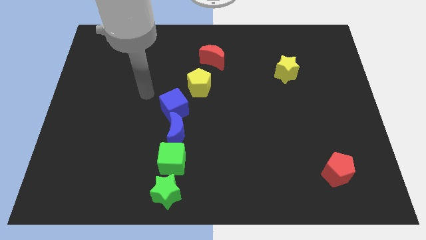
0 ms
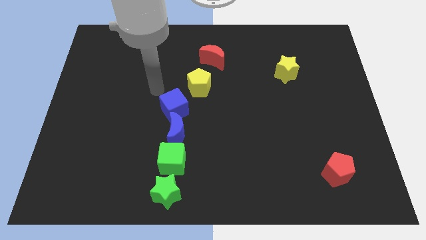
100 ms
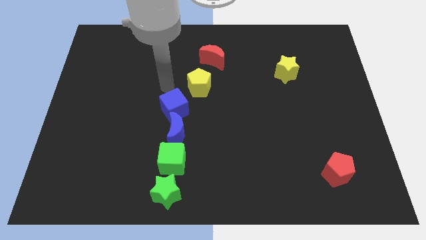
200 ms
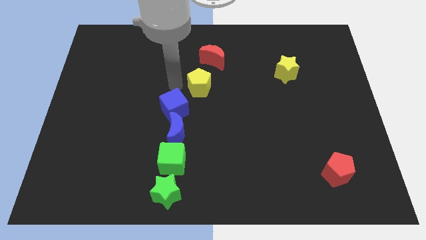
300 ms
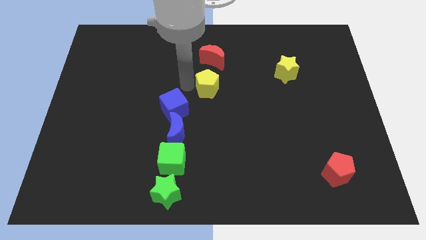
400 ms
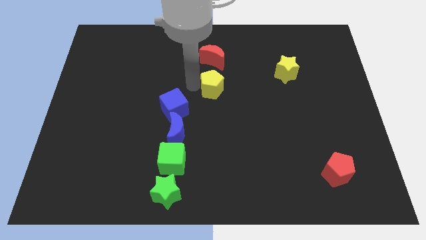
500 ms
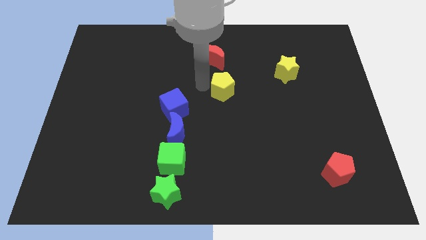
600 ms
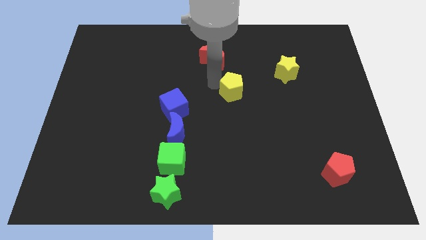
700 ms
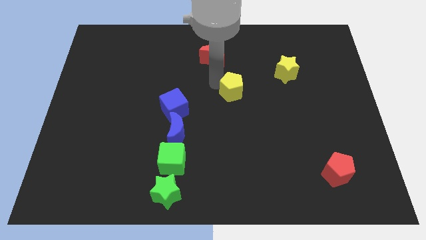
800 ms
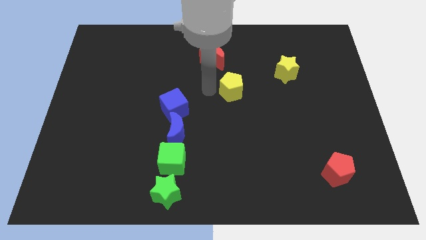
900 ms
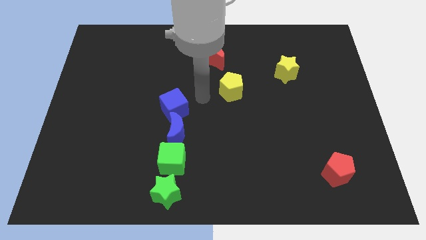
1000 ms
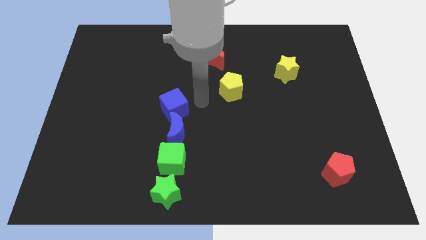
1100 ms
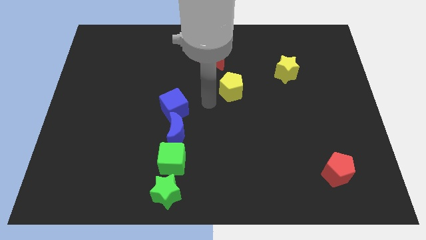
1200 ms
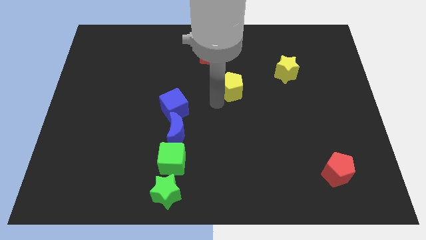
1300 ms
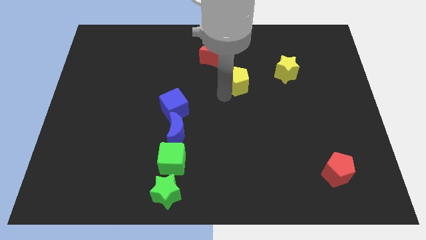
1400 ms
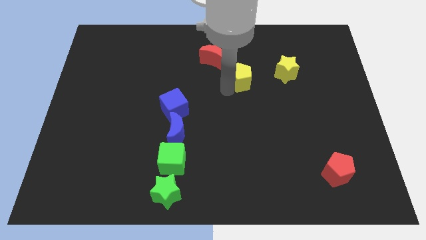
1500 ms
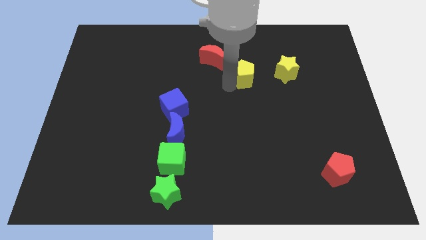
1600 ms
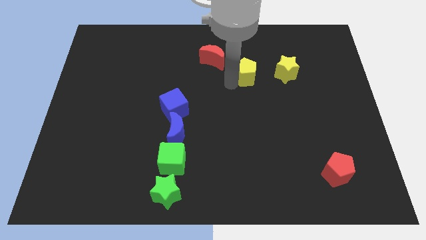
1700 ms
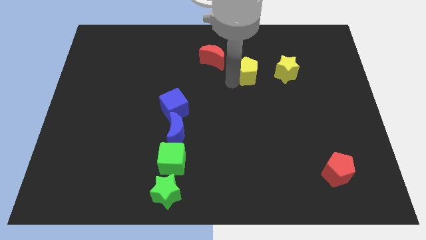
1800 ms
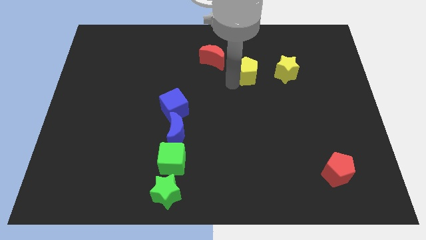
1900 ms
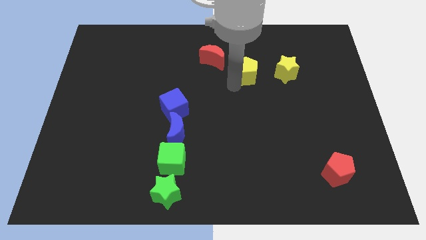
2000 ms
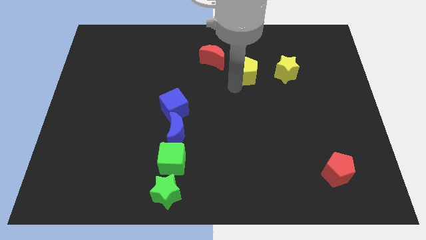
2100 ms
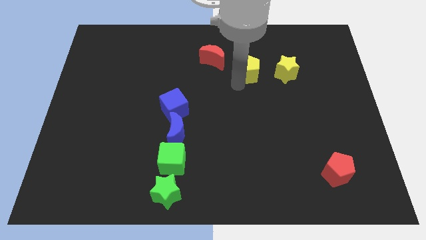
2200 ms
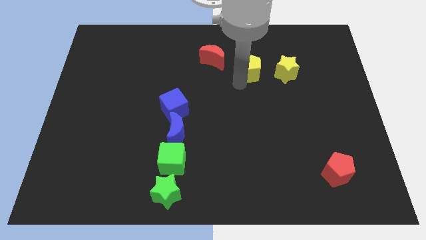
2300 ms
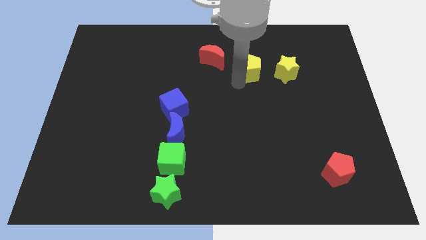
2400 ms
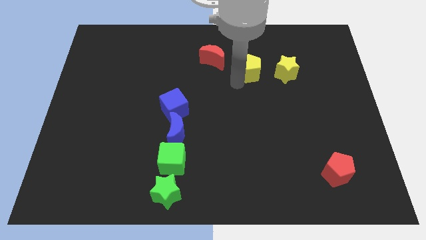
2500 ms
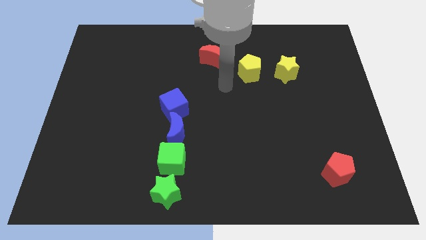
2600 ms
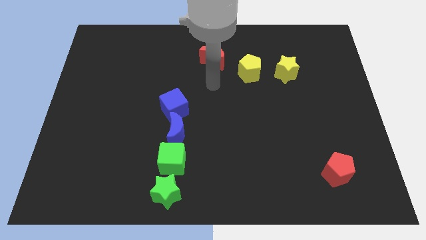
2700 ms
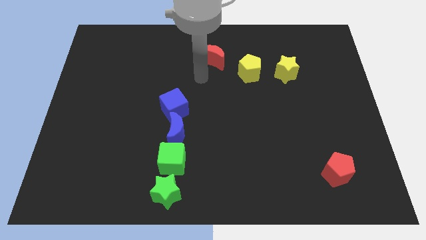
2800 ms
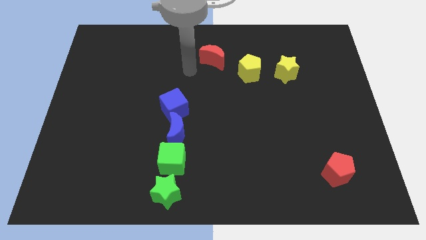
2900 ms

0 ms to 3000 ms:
put the yellow pentagon to the left of the yellow star

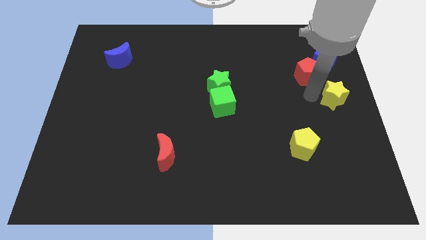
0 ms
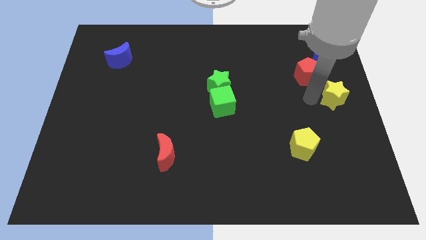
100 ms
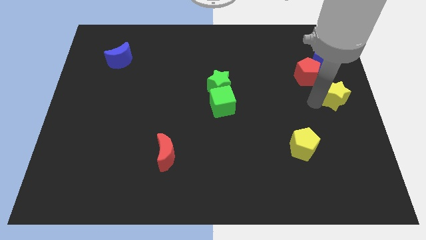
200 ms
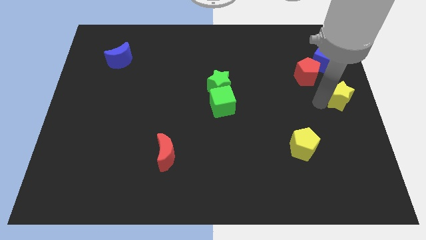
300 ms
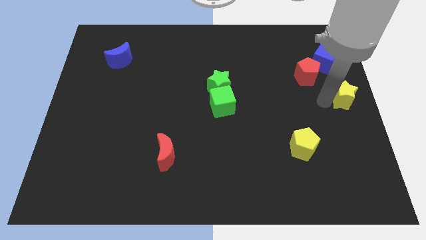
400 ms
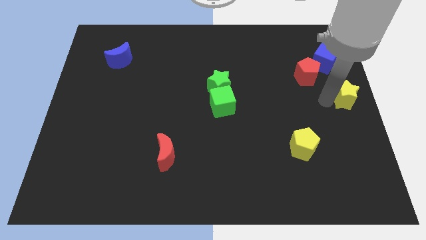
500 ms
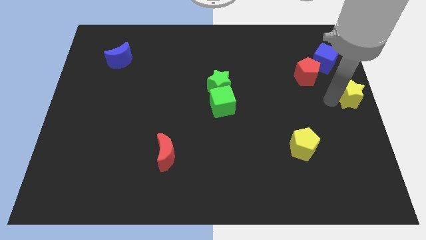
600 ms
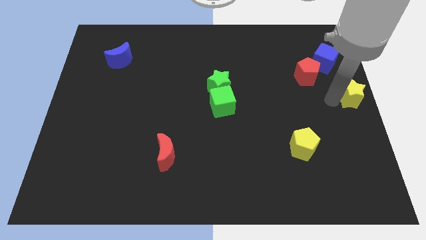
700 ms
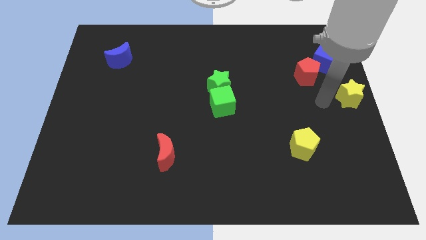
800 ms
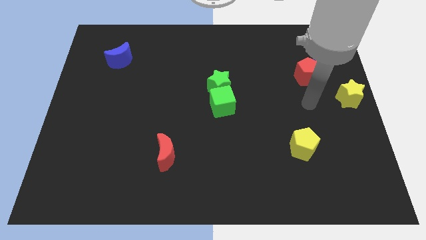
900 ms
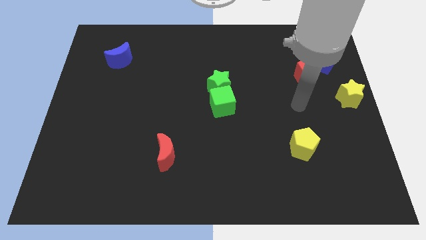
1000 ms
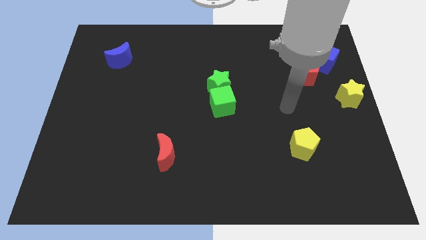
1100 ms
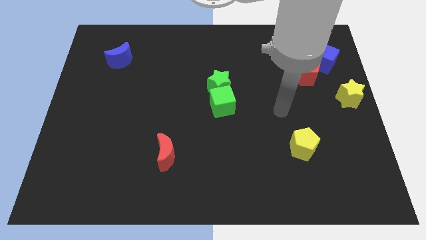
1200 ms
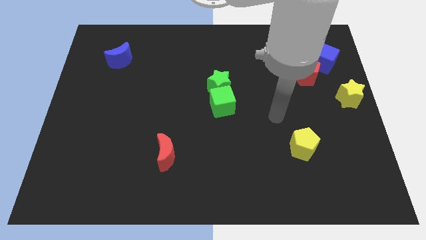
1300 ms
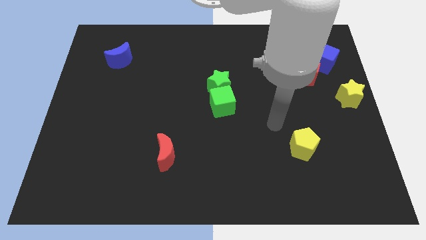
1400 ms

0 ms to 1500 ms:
place the yellow star at the right center of the board

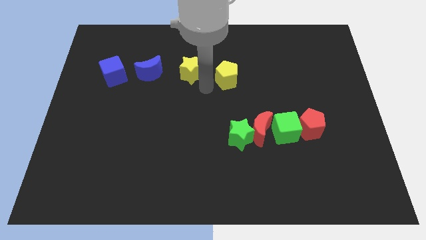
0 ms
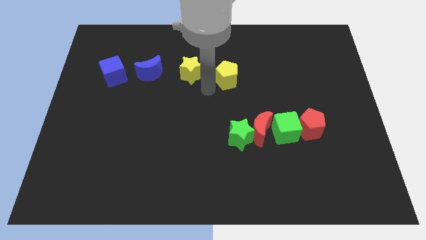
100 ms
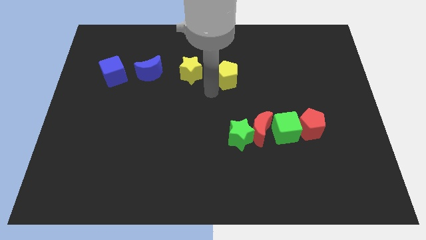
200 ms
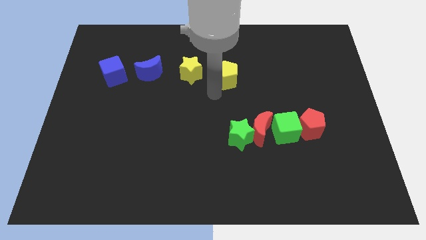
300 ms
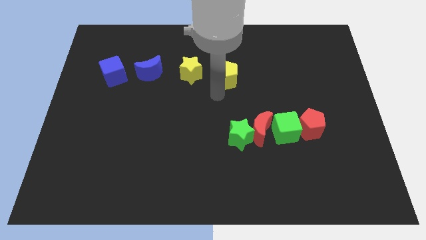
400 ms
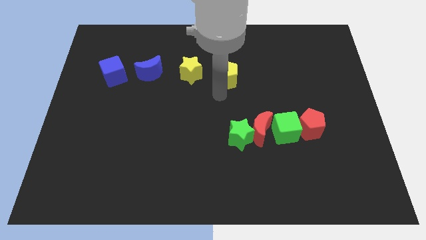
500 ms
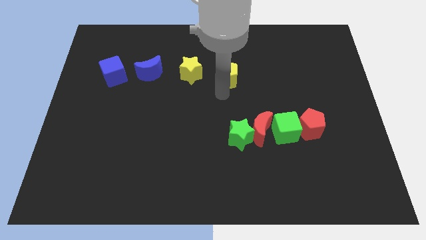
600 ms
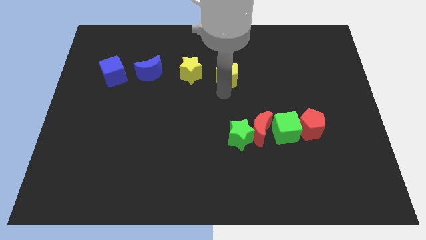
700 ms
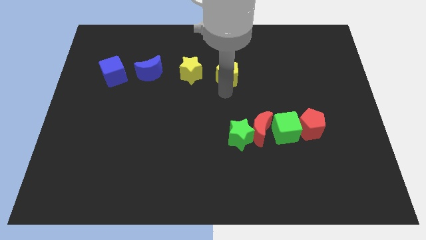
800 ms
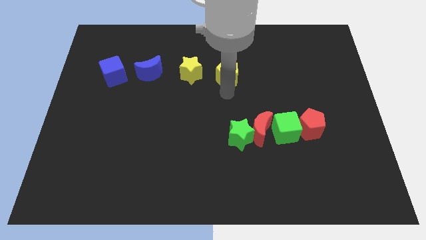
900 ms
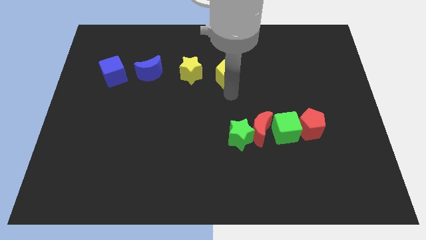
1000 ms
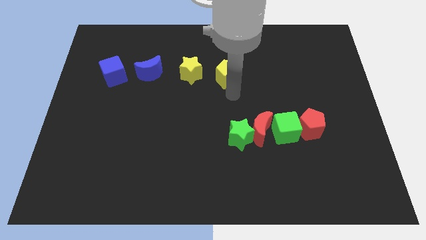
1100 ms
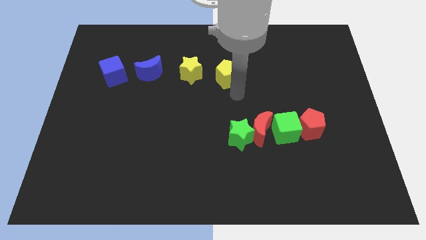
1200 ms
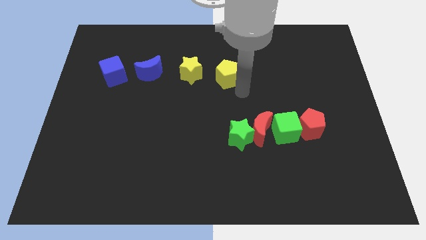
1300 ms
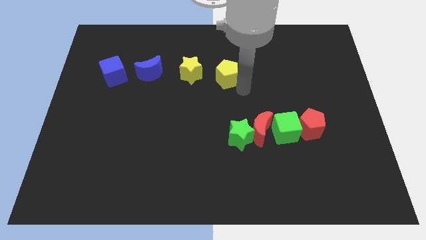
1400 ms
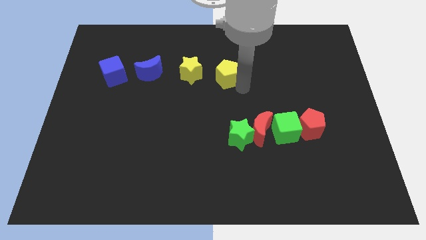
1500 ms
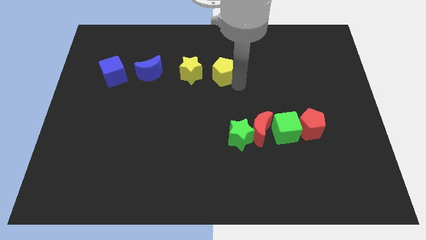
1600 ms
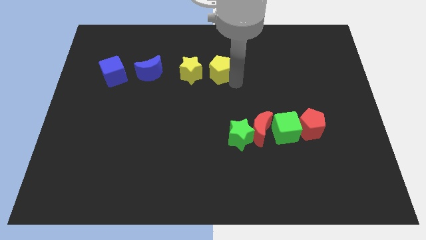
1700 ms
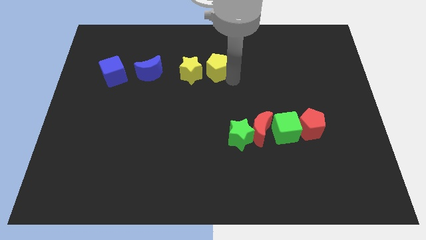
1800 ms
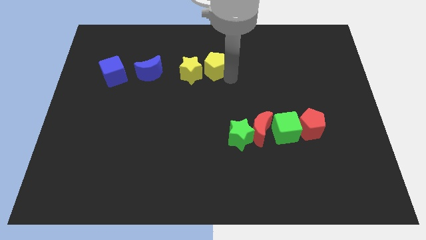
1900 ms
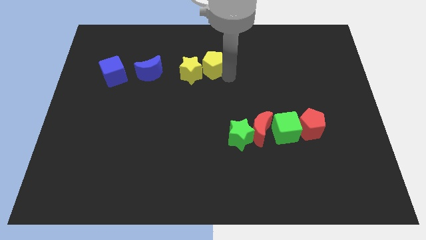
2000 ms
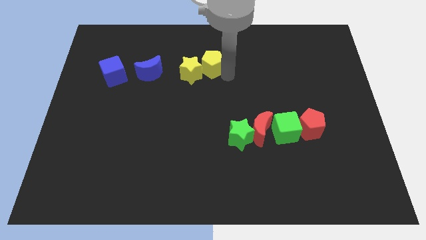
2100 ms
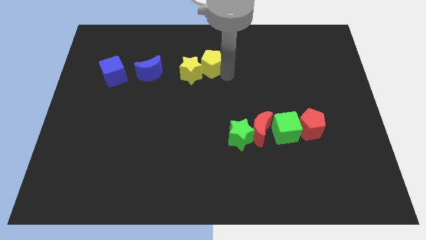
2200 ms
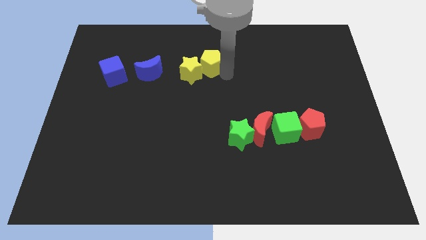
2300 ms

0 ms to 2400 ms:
place the yellow pentagon right of the yellow star

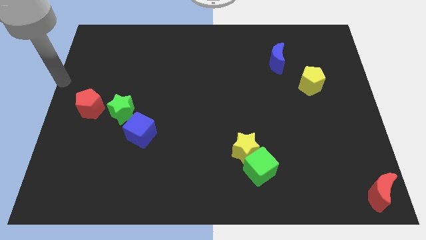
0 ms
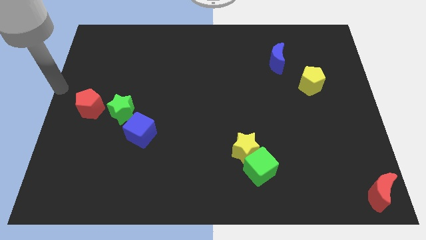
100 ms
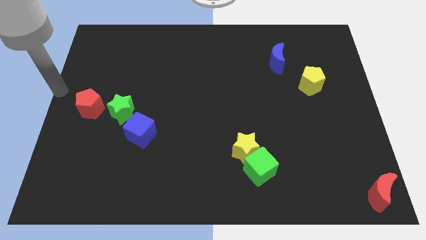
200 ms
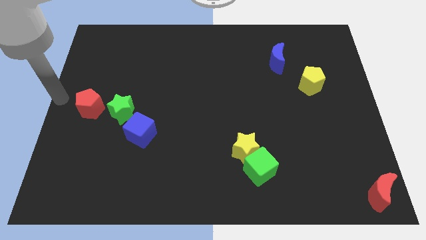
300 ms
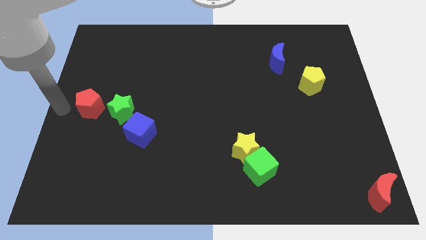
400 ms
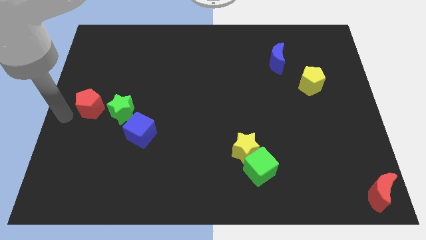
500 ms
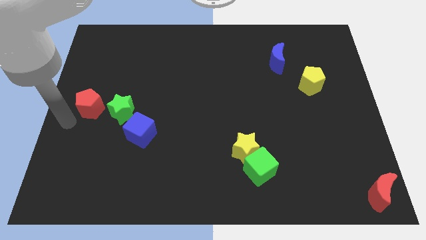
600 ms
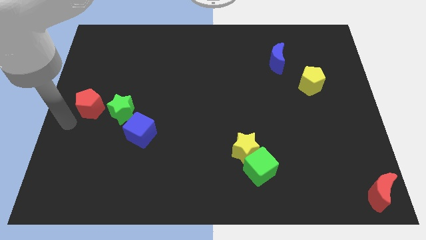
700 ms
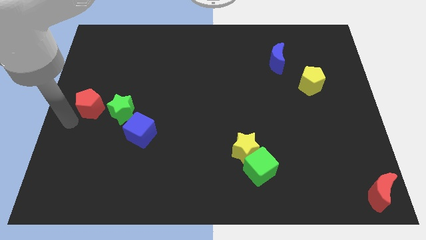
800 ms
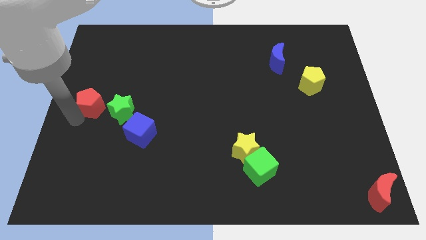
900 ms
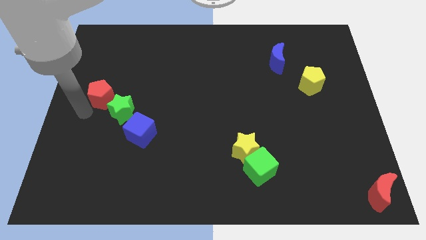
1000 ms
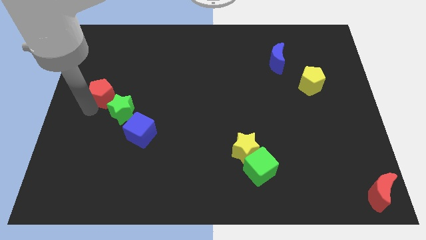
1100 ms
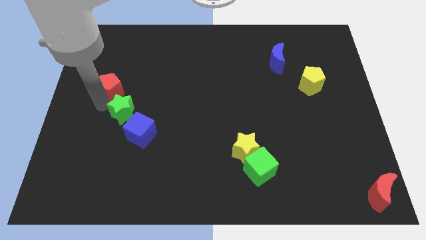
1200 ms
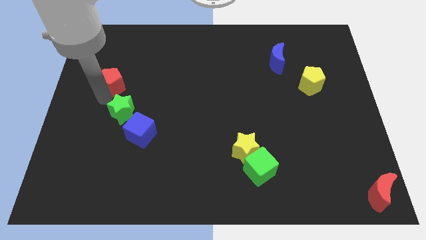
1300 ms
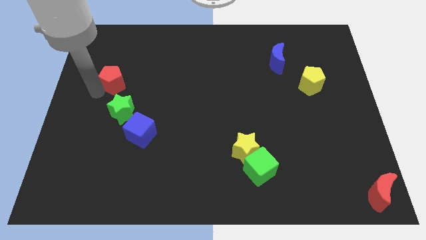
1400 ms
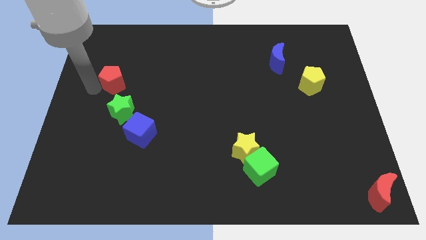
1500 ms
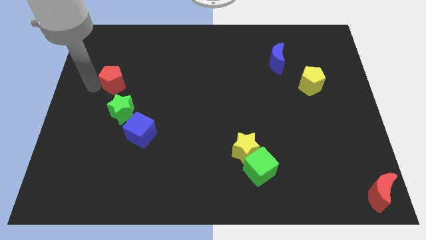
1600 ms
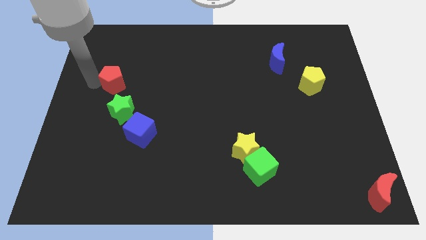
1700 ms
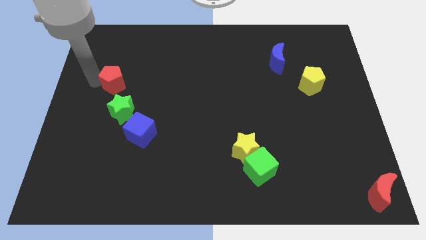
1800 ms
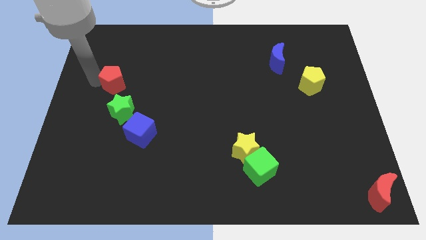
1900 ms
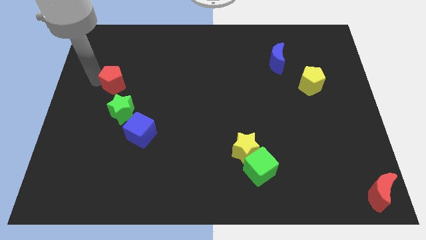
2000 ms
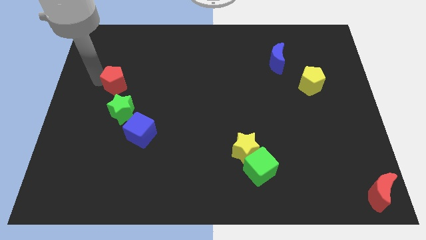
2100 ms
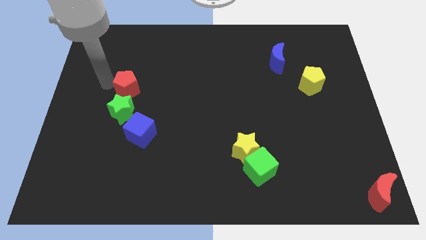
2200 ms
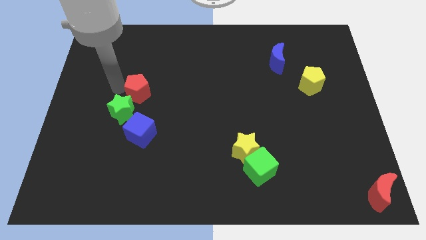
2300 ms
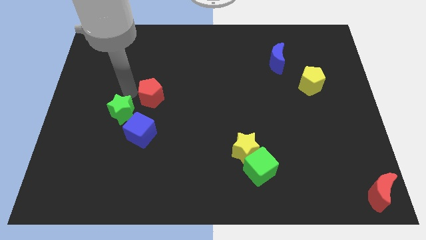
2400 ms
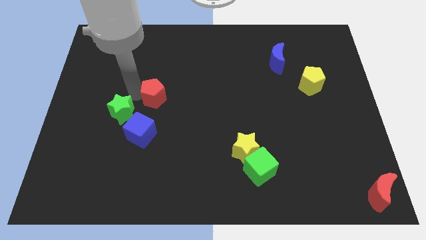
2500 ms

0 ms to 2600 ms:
push red pentagon above blue cube
